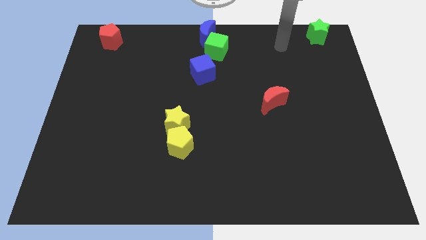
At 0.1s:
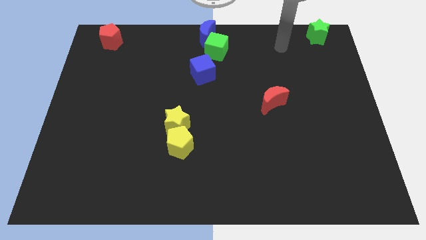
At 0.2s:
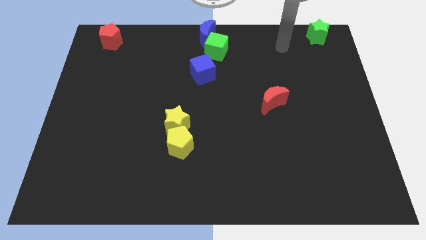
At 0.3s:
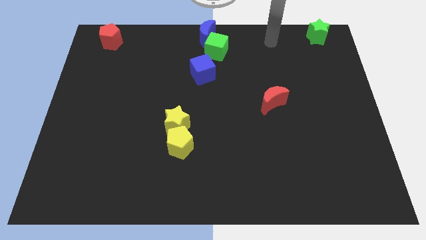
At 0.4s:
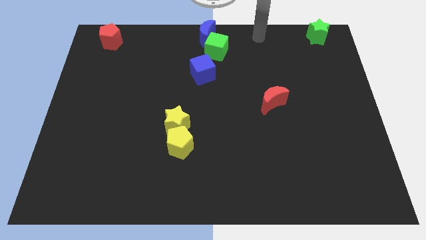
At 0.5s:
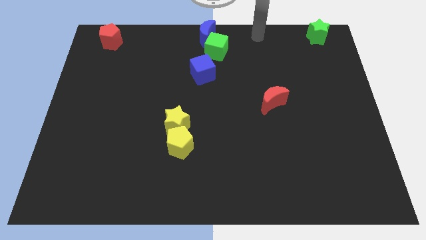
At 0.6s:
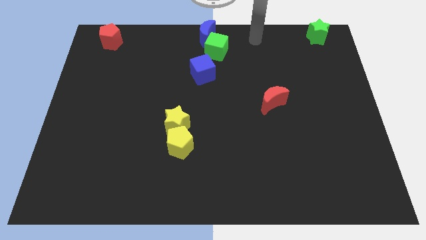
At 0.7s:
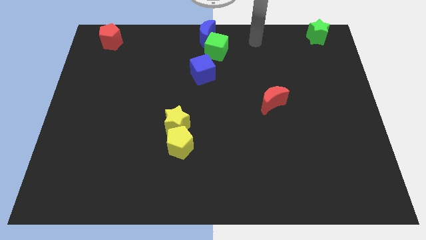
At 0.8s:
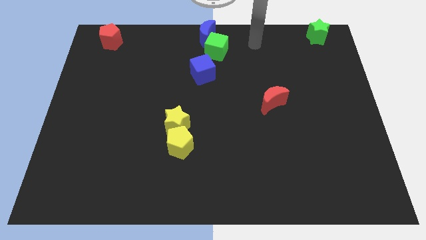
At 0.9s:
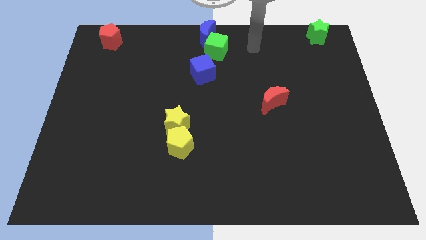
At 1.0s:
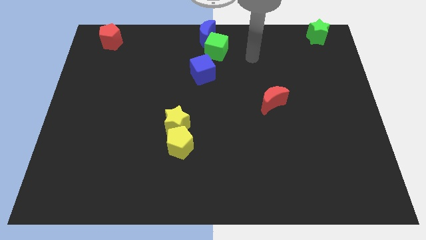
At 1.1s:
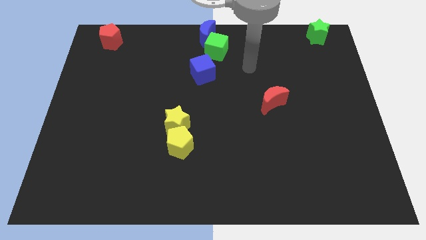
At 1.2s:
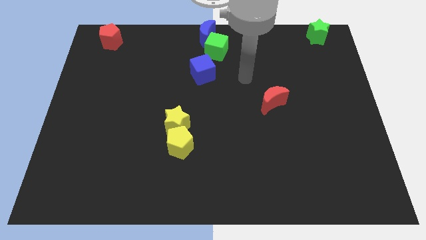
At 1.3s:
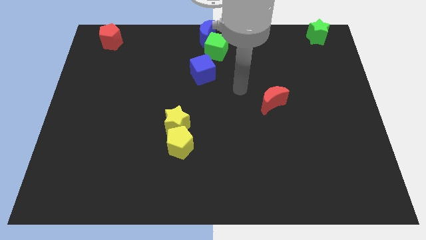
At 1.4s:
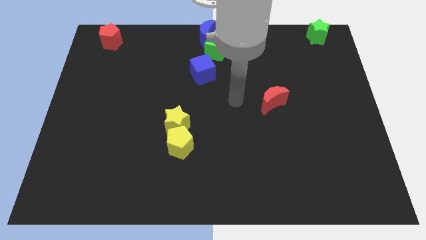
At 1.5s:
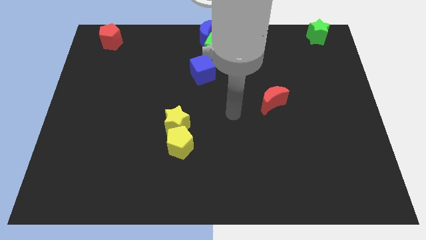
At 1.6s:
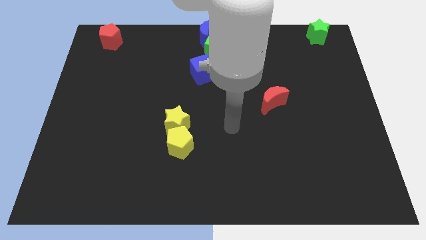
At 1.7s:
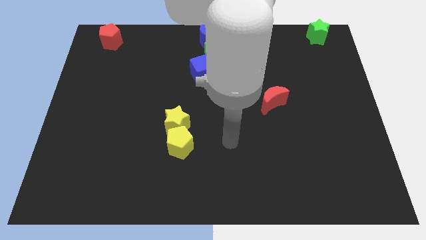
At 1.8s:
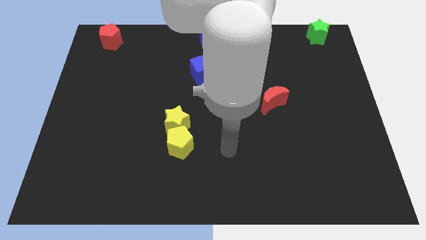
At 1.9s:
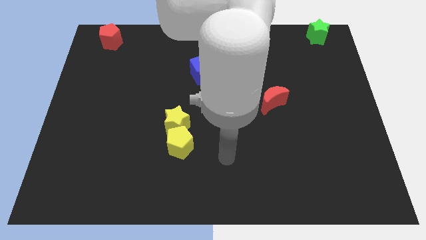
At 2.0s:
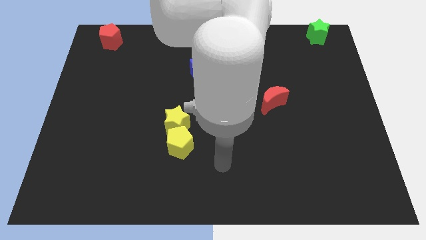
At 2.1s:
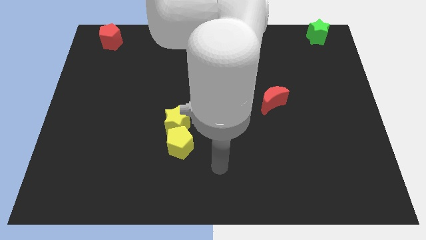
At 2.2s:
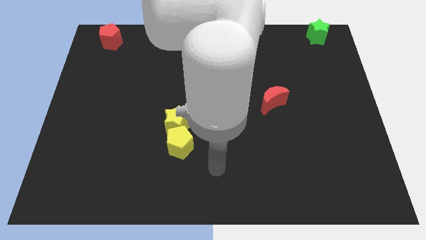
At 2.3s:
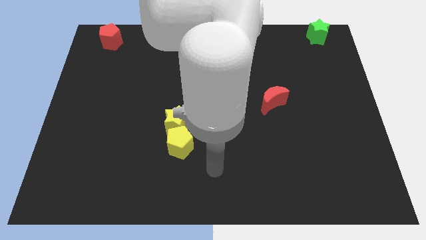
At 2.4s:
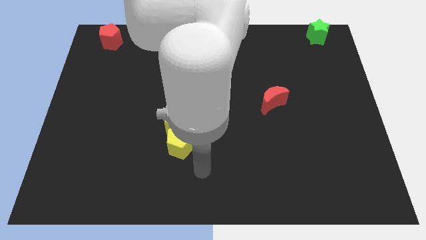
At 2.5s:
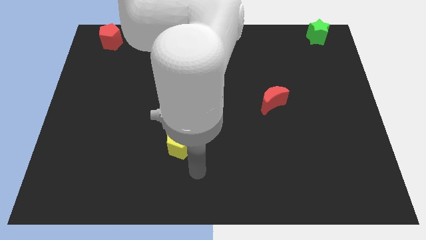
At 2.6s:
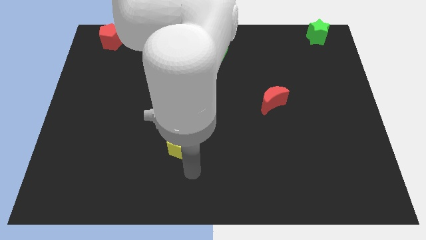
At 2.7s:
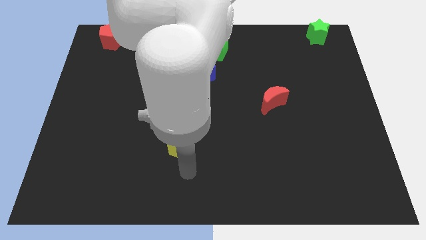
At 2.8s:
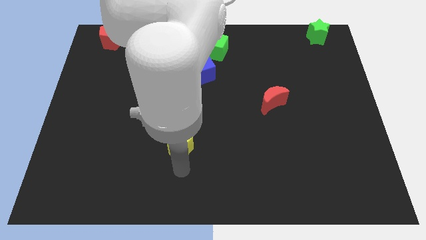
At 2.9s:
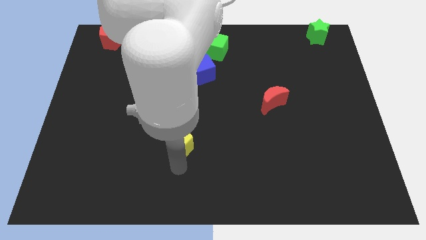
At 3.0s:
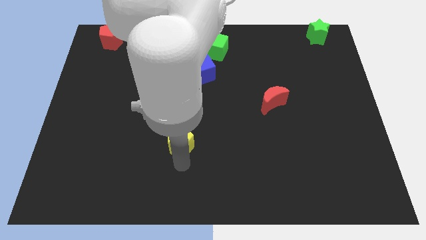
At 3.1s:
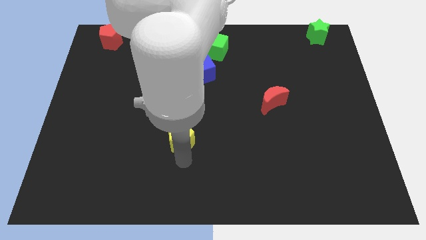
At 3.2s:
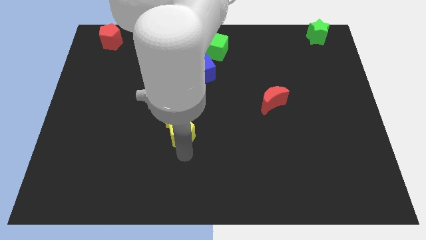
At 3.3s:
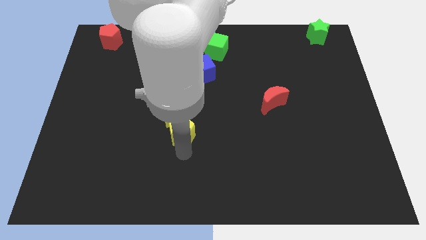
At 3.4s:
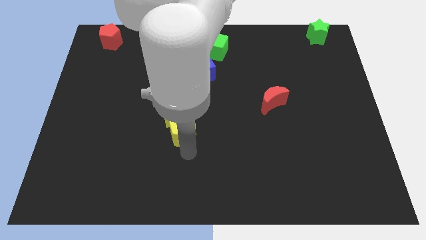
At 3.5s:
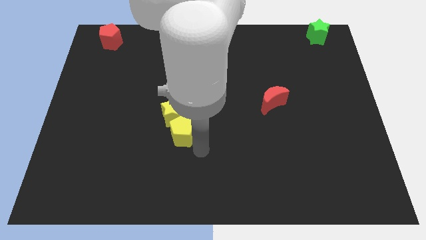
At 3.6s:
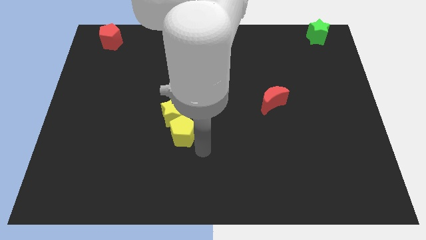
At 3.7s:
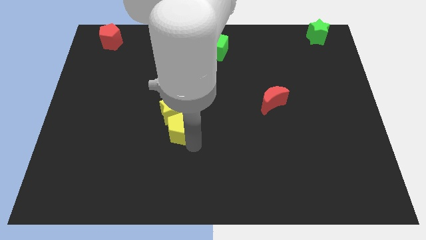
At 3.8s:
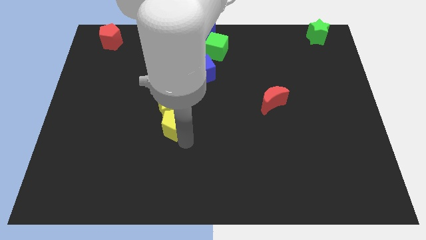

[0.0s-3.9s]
move the yellow blocks slightly up

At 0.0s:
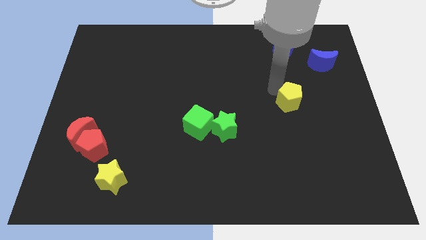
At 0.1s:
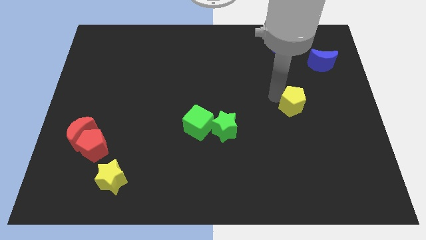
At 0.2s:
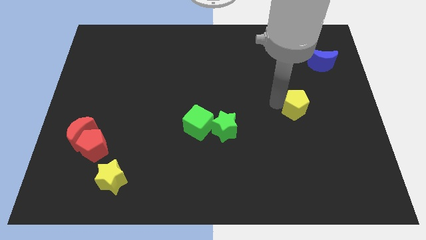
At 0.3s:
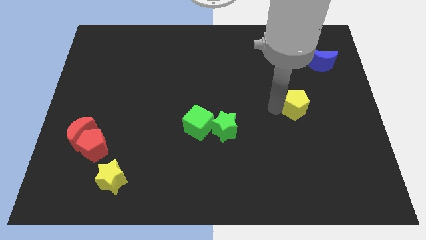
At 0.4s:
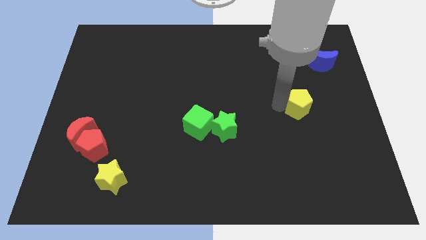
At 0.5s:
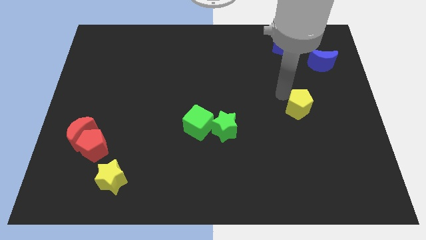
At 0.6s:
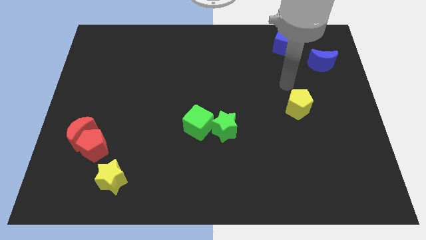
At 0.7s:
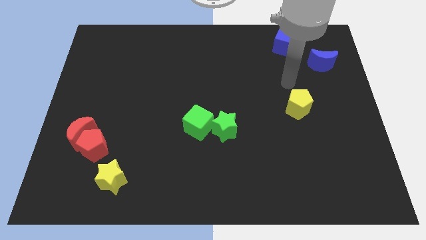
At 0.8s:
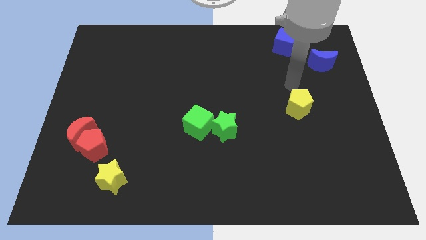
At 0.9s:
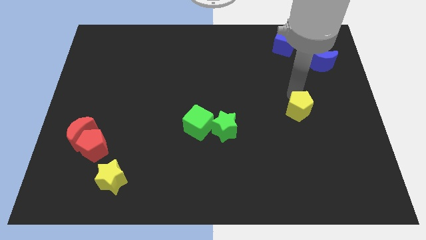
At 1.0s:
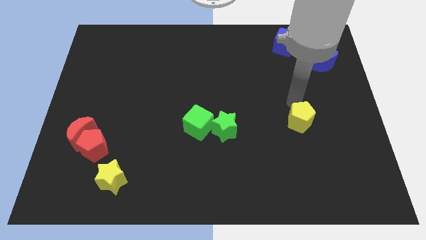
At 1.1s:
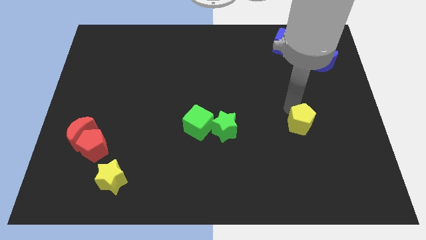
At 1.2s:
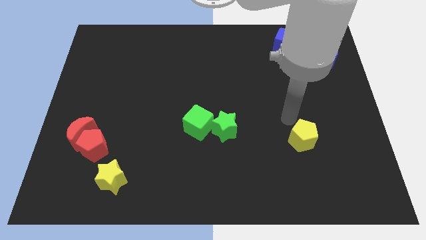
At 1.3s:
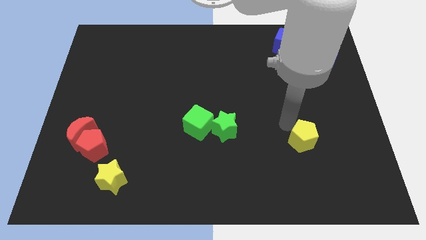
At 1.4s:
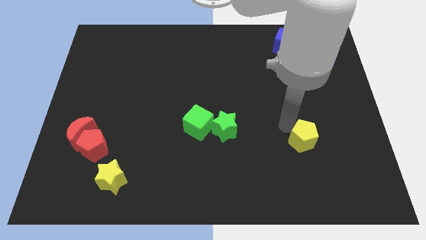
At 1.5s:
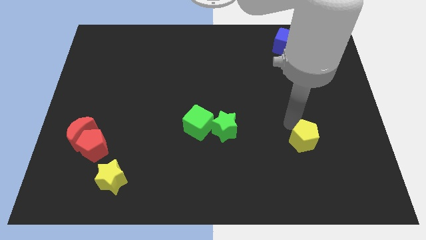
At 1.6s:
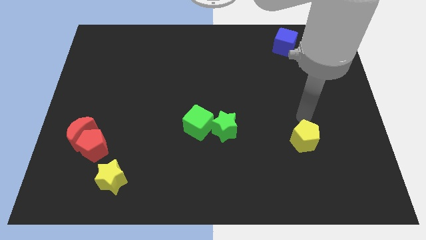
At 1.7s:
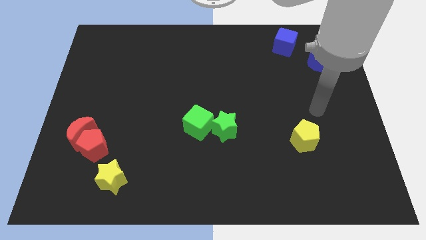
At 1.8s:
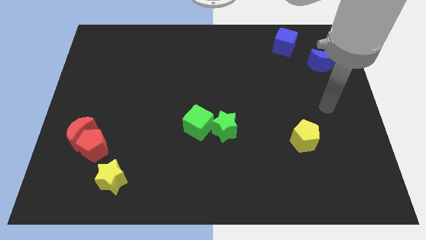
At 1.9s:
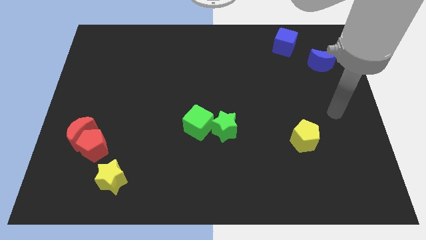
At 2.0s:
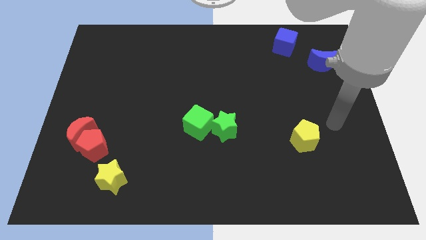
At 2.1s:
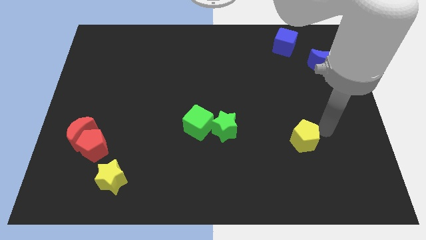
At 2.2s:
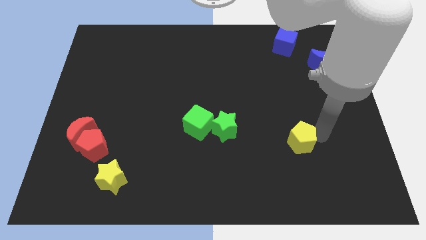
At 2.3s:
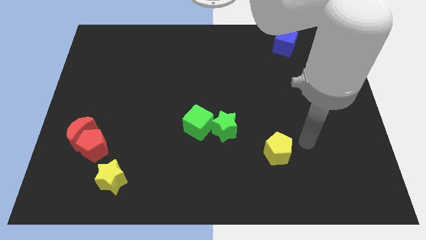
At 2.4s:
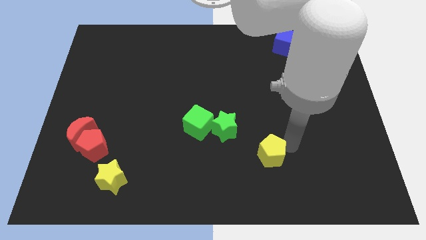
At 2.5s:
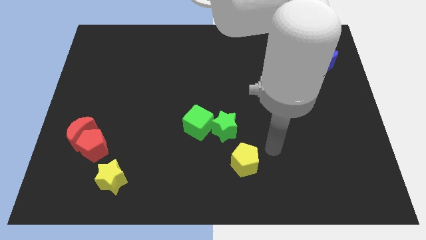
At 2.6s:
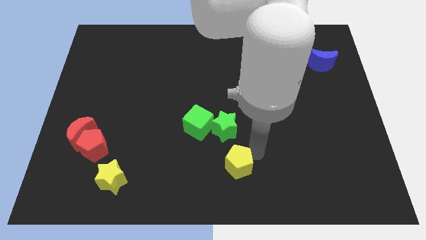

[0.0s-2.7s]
push yellow pentagon below green star

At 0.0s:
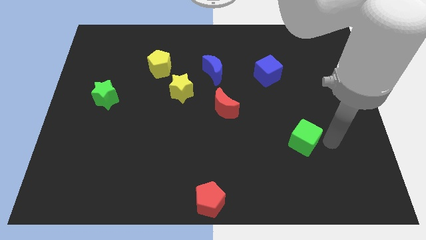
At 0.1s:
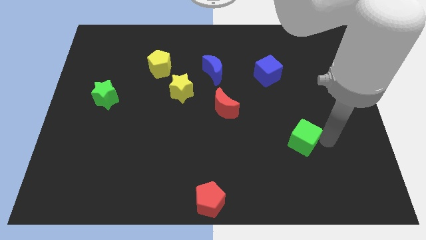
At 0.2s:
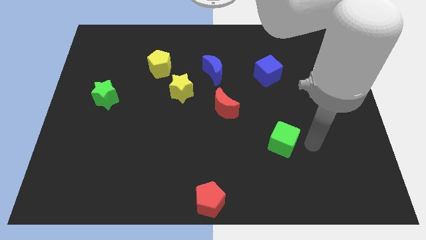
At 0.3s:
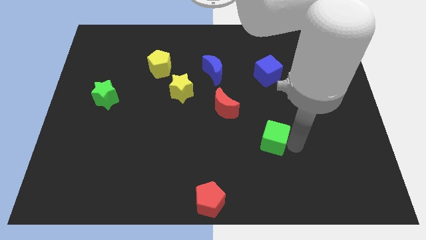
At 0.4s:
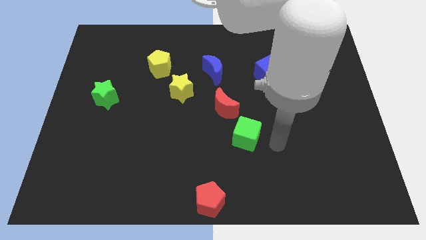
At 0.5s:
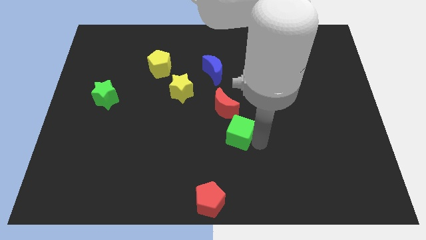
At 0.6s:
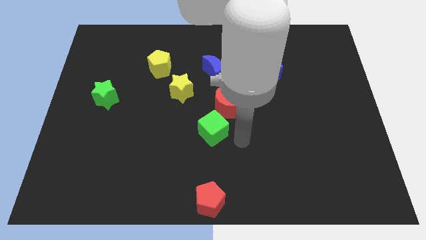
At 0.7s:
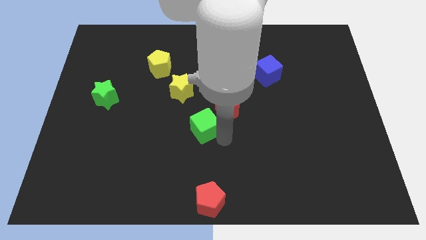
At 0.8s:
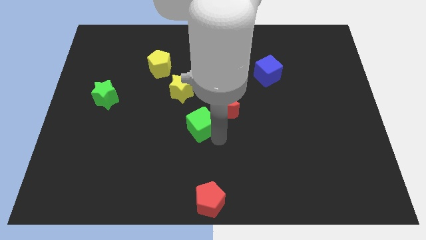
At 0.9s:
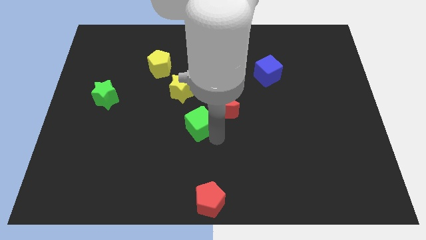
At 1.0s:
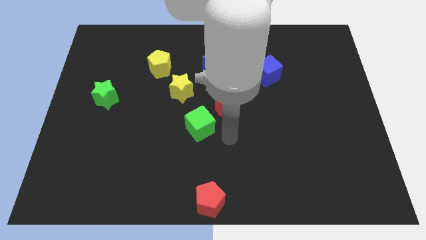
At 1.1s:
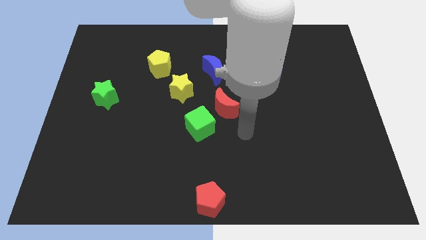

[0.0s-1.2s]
move the green cube into the center of the board

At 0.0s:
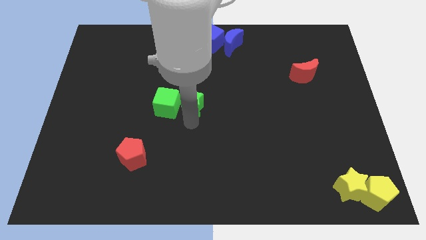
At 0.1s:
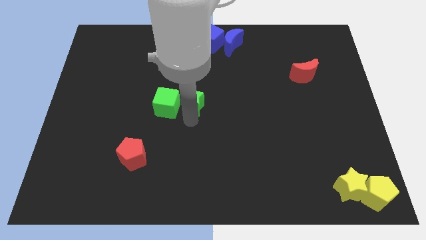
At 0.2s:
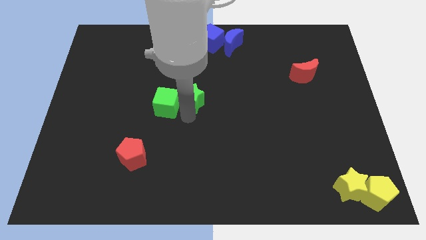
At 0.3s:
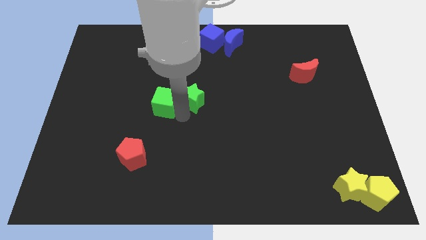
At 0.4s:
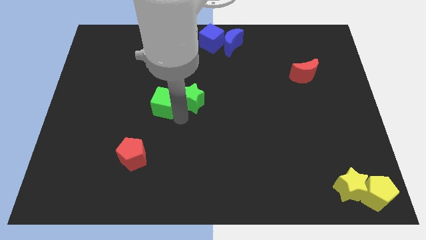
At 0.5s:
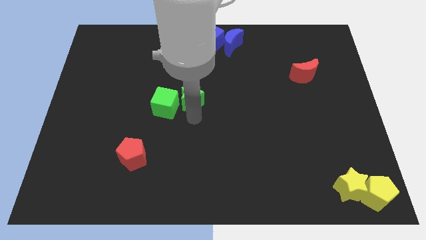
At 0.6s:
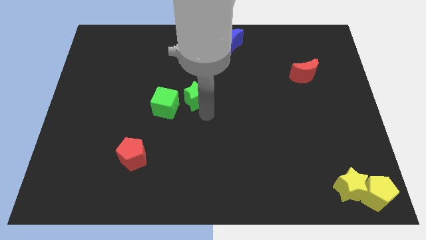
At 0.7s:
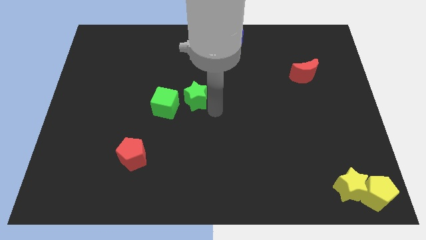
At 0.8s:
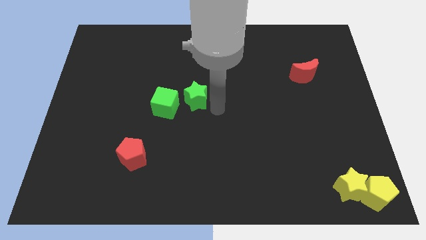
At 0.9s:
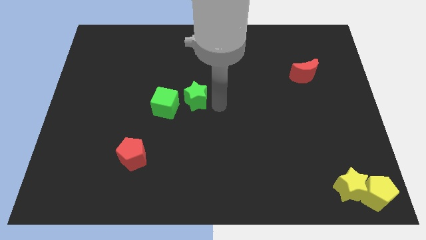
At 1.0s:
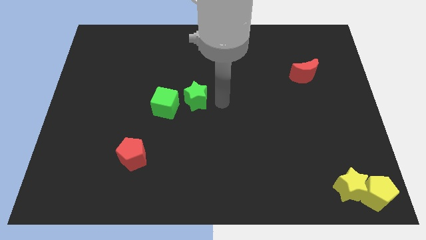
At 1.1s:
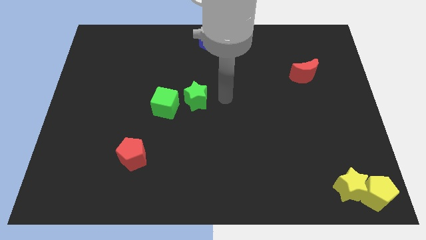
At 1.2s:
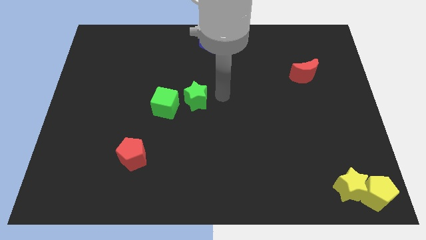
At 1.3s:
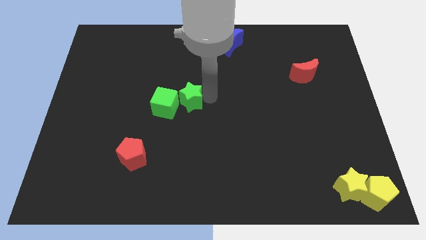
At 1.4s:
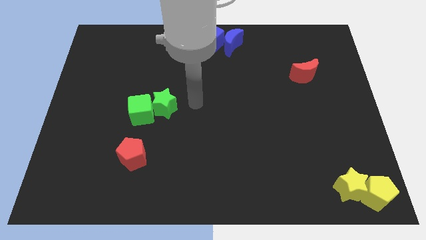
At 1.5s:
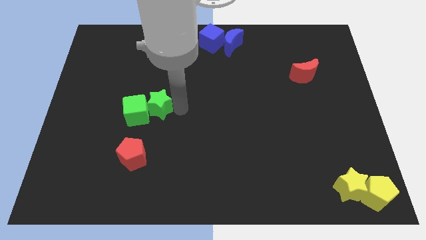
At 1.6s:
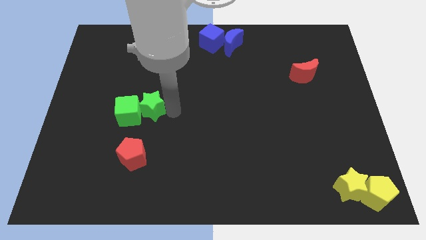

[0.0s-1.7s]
slide green star into the green cube
